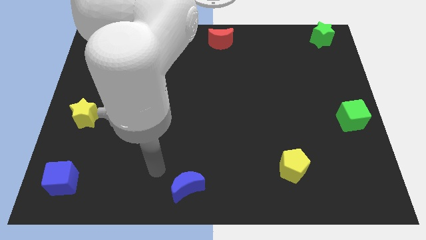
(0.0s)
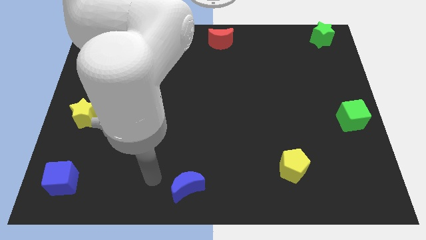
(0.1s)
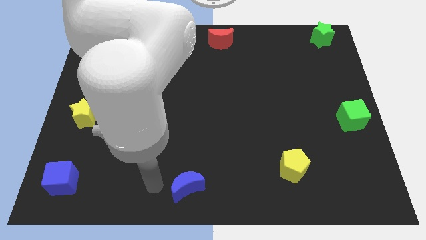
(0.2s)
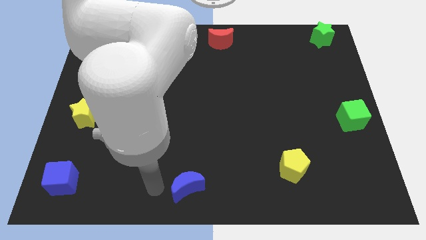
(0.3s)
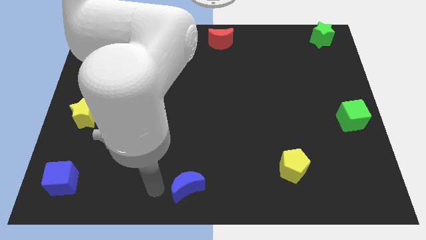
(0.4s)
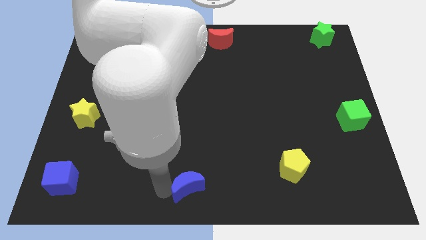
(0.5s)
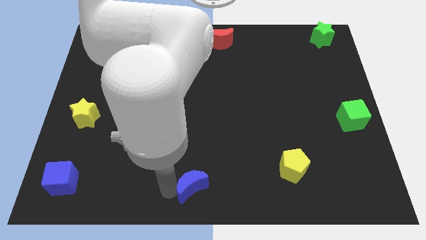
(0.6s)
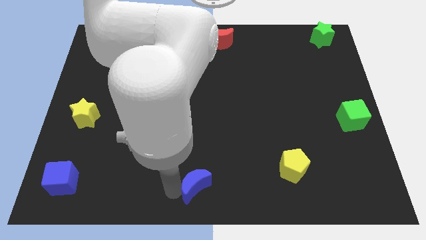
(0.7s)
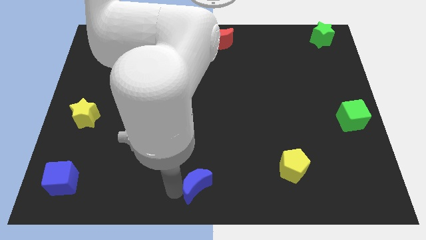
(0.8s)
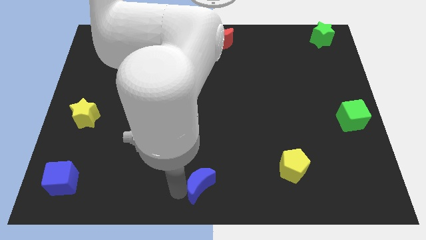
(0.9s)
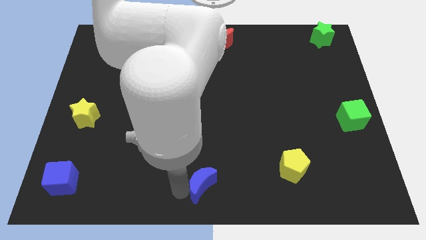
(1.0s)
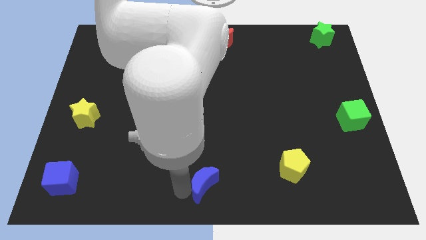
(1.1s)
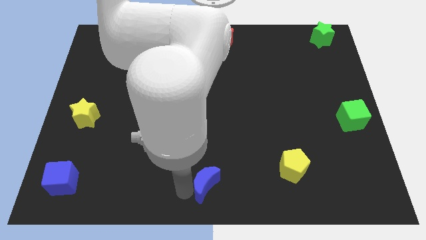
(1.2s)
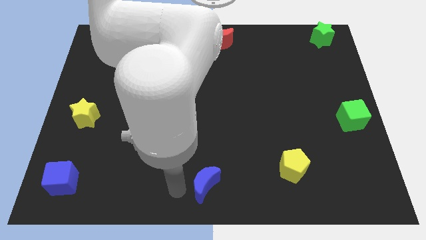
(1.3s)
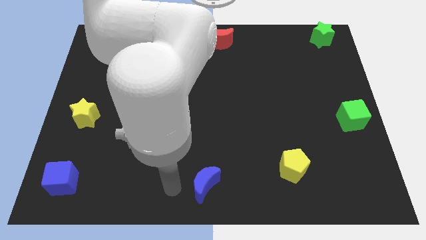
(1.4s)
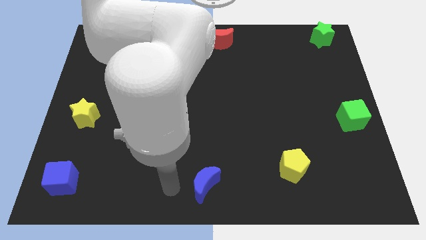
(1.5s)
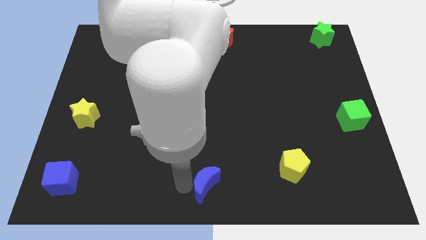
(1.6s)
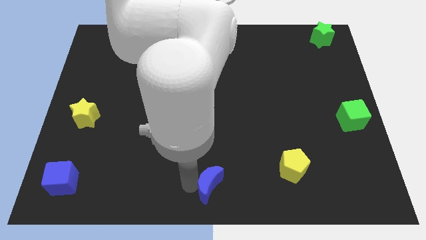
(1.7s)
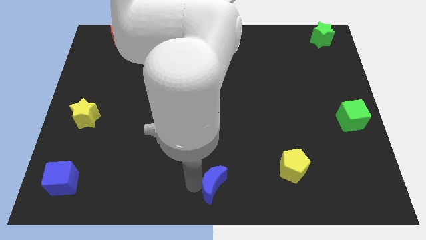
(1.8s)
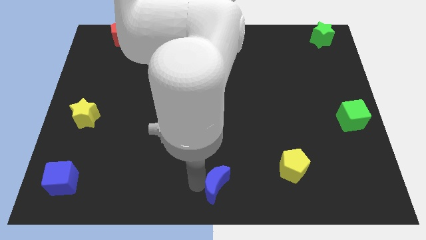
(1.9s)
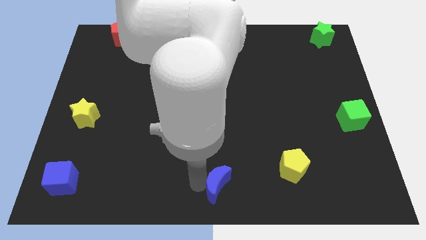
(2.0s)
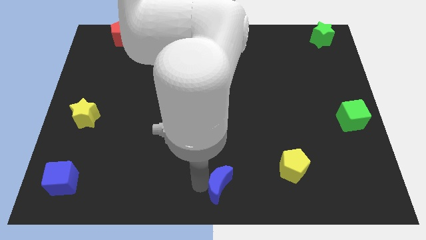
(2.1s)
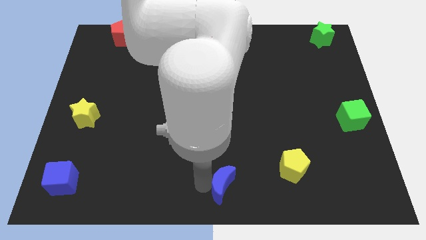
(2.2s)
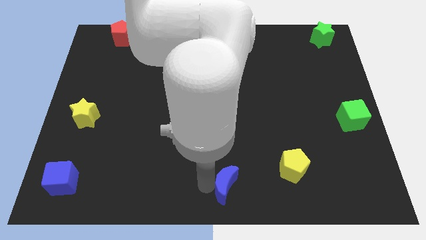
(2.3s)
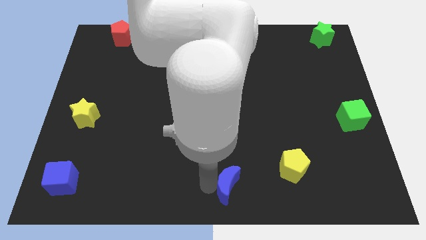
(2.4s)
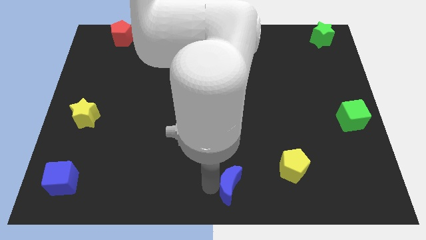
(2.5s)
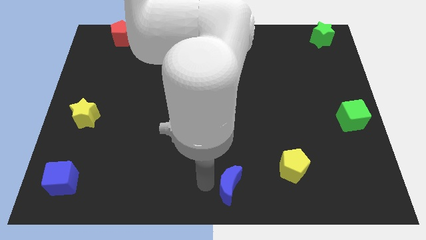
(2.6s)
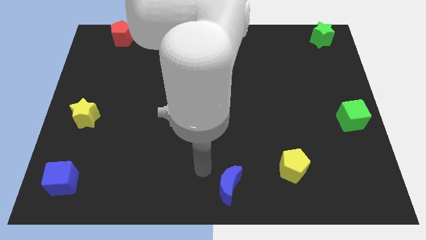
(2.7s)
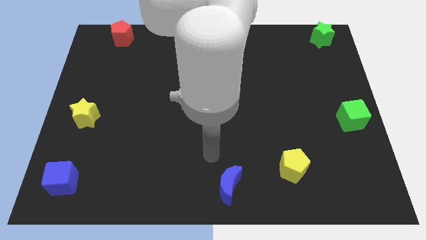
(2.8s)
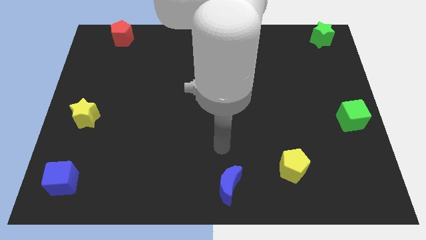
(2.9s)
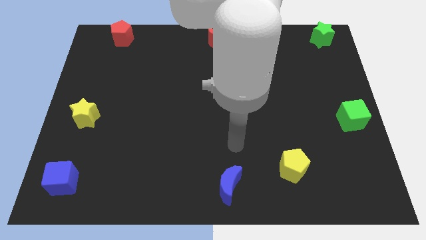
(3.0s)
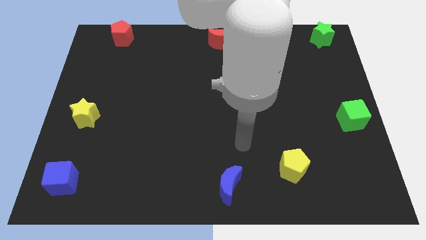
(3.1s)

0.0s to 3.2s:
push the blue crescent slightly to the right

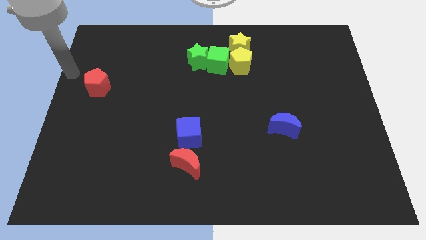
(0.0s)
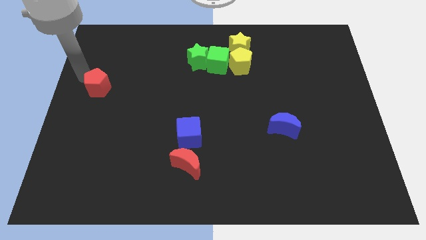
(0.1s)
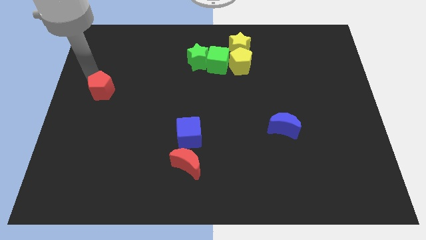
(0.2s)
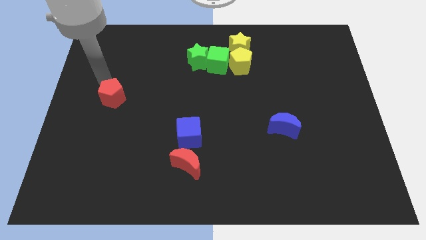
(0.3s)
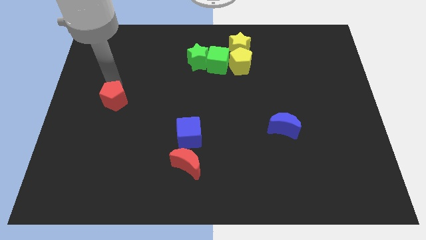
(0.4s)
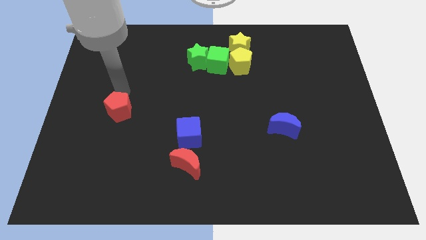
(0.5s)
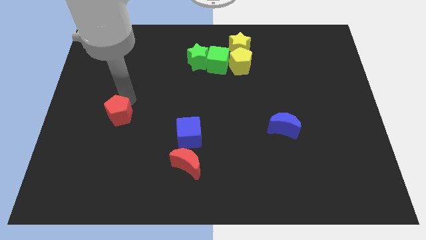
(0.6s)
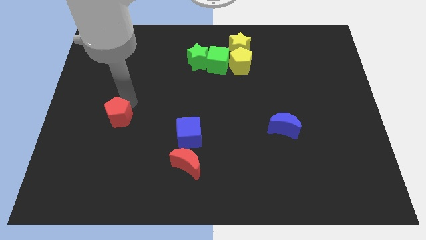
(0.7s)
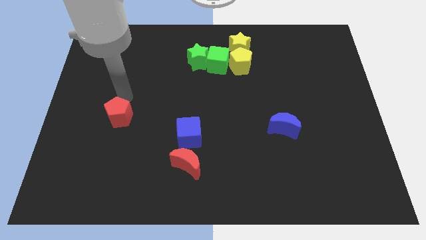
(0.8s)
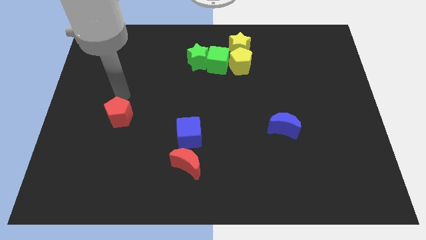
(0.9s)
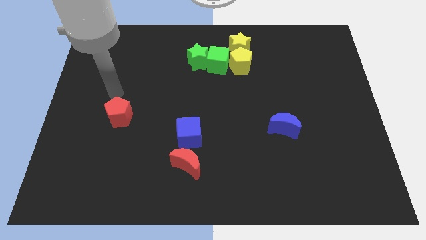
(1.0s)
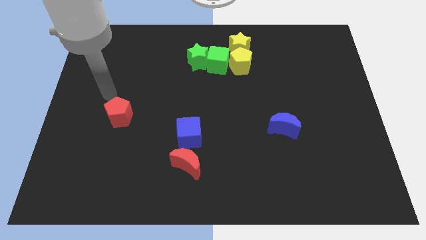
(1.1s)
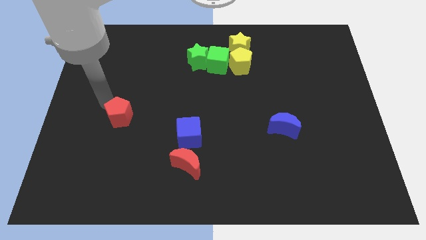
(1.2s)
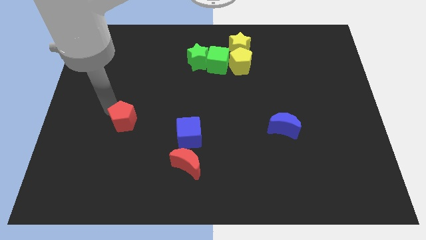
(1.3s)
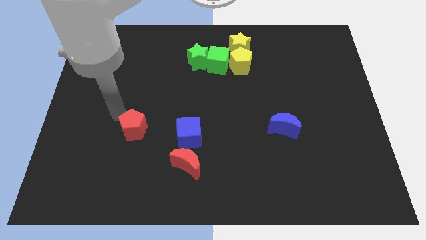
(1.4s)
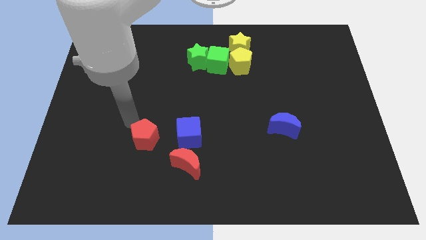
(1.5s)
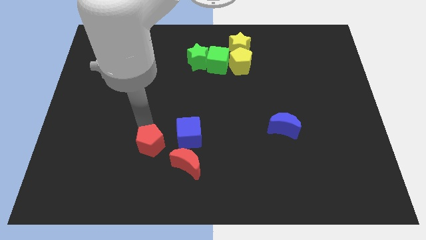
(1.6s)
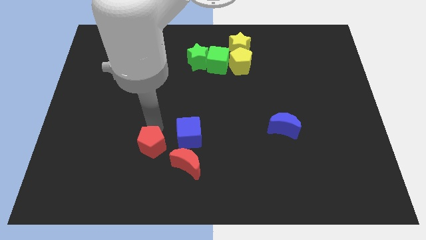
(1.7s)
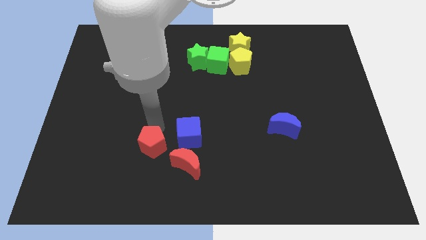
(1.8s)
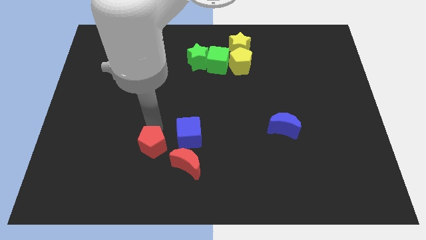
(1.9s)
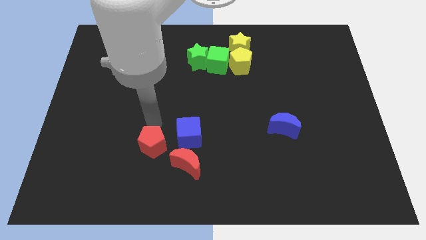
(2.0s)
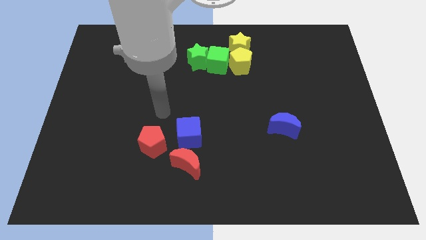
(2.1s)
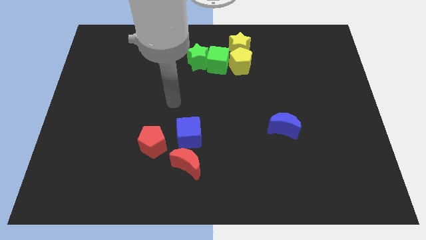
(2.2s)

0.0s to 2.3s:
place the red pentagon diagonal left of red moon

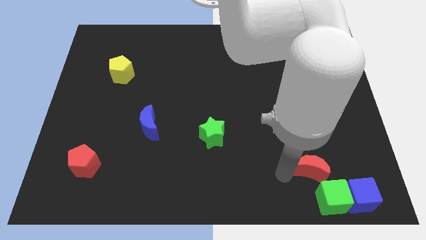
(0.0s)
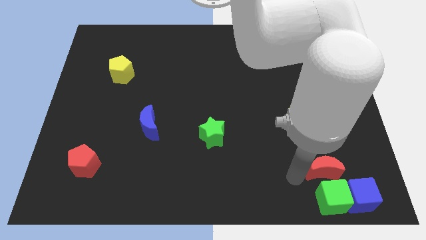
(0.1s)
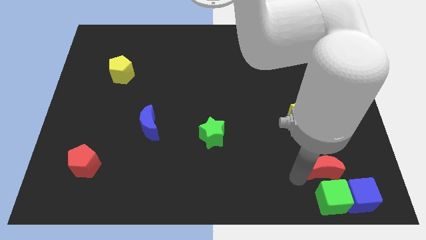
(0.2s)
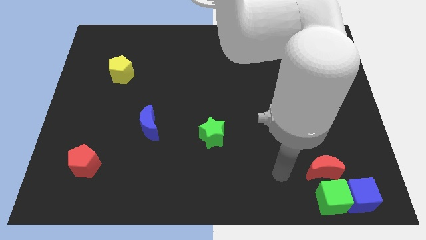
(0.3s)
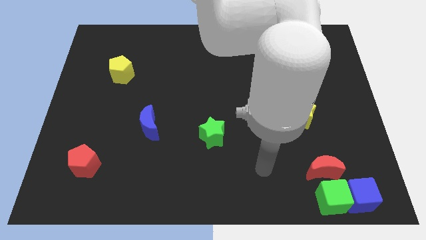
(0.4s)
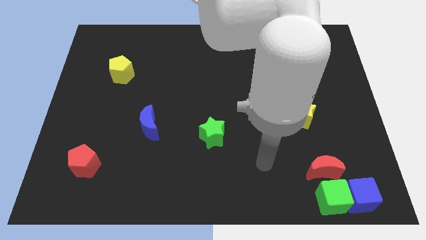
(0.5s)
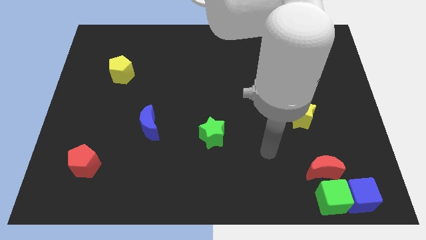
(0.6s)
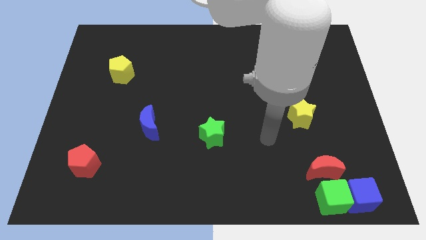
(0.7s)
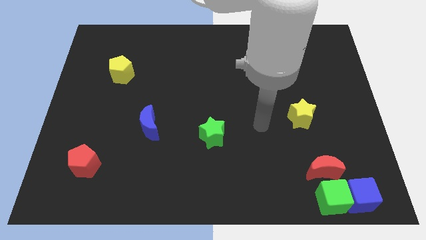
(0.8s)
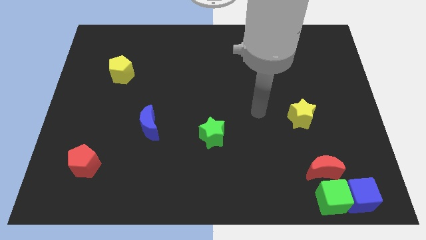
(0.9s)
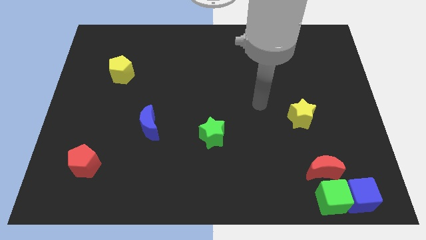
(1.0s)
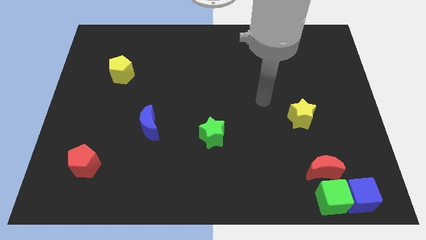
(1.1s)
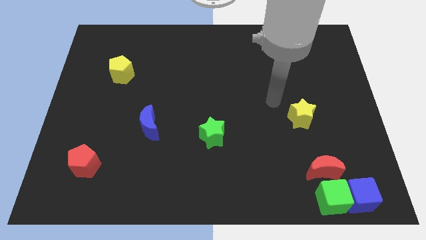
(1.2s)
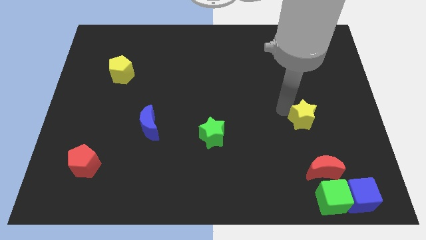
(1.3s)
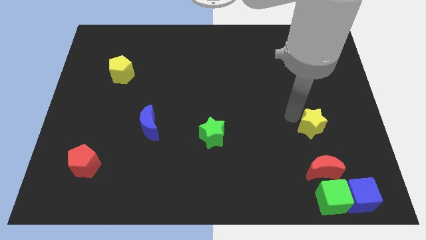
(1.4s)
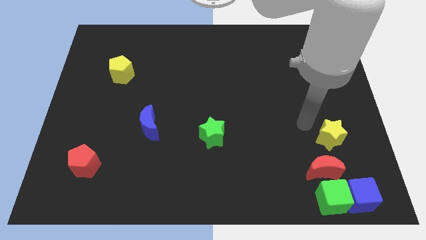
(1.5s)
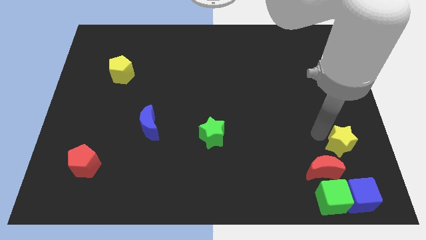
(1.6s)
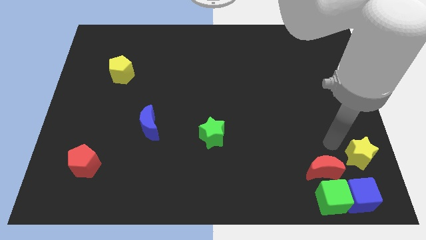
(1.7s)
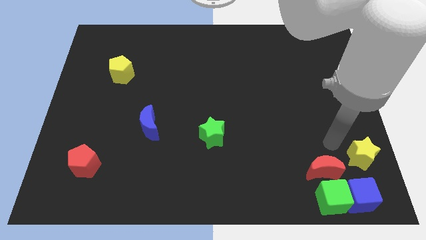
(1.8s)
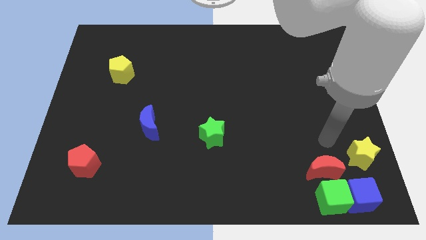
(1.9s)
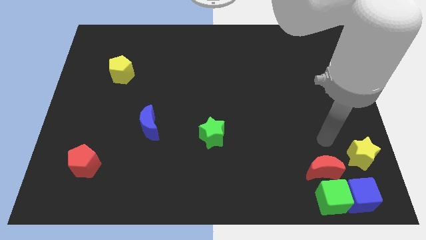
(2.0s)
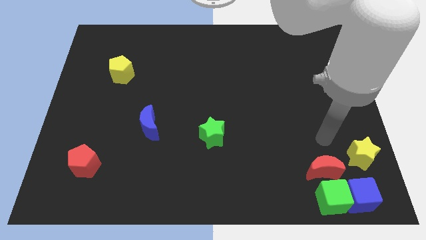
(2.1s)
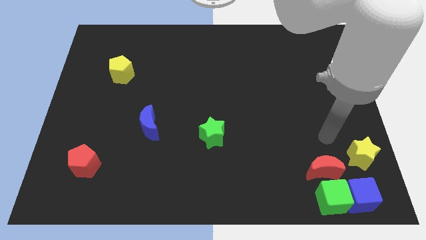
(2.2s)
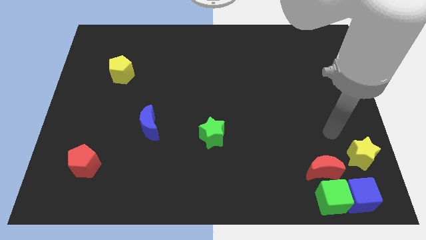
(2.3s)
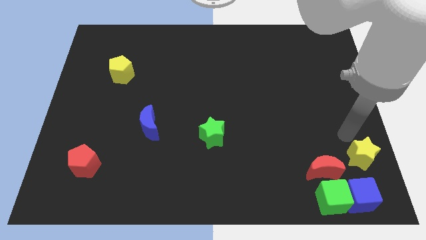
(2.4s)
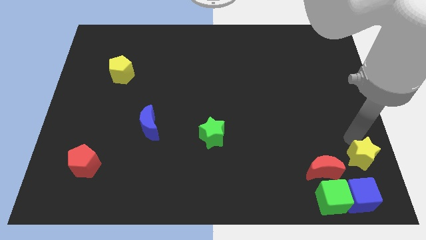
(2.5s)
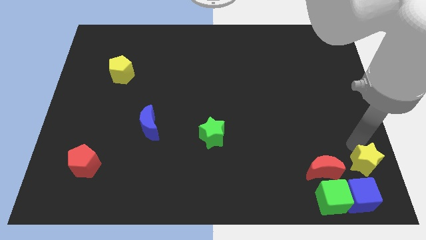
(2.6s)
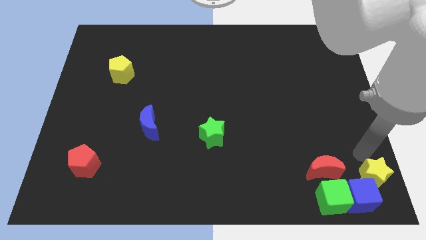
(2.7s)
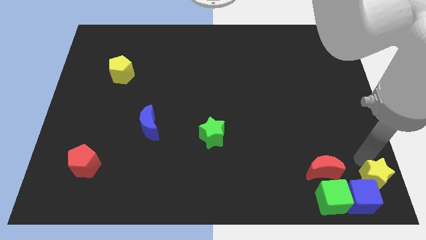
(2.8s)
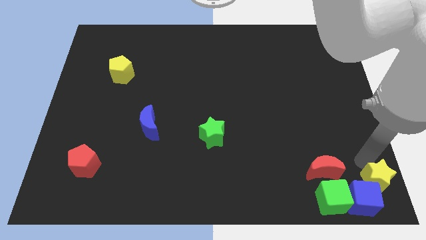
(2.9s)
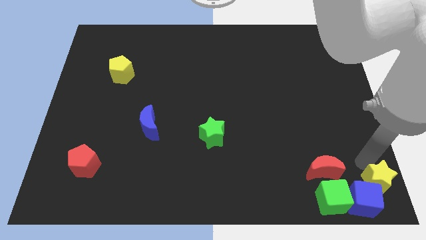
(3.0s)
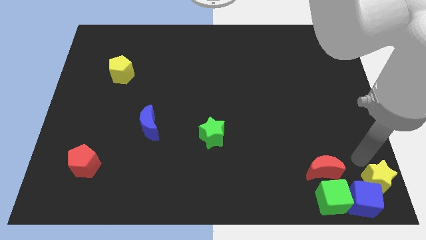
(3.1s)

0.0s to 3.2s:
place a yellow star close to the blue cube

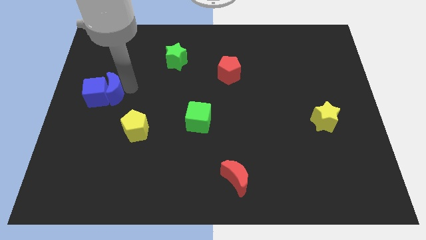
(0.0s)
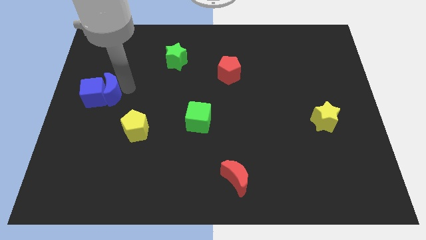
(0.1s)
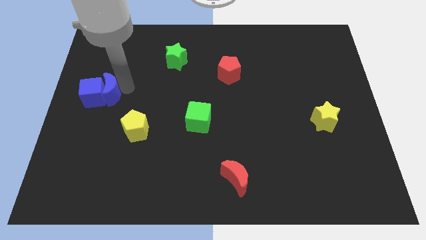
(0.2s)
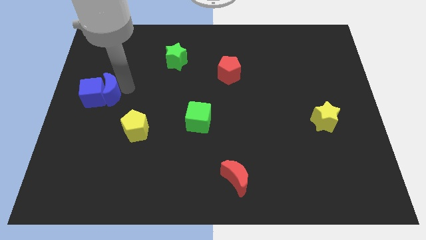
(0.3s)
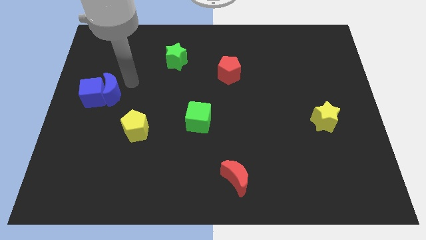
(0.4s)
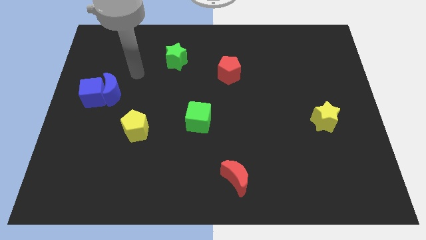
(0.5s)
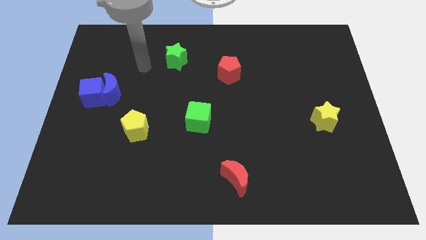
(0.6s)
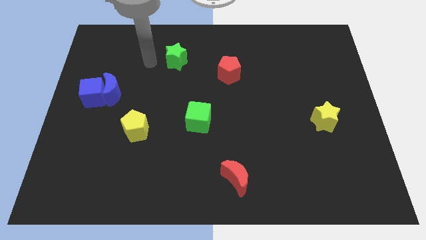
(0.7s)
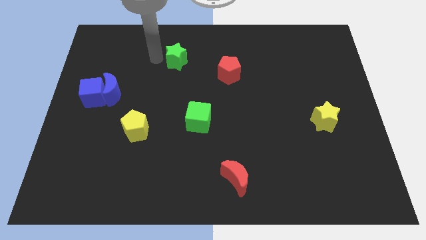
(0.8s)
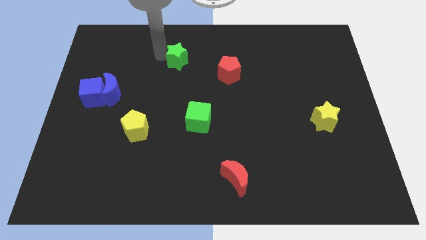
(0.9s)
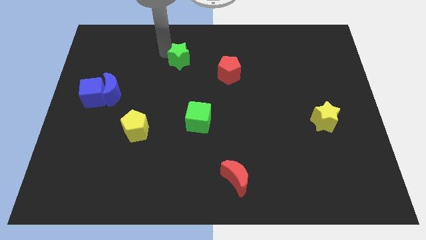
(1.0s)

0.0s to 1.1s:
move the green star slightly on its left
